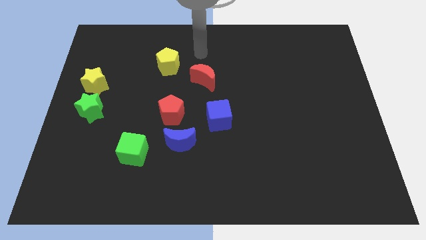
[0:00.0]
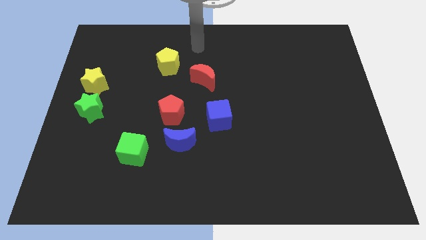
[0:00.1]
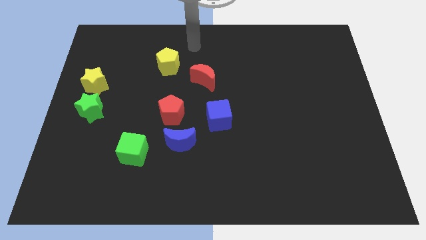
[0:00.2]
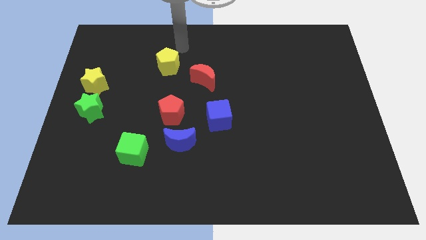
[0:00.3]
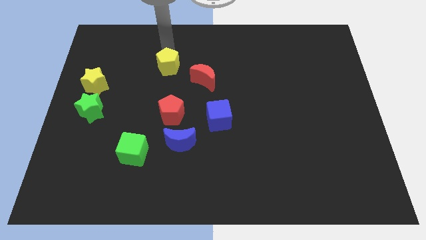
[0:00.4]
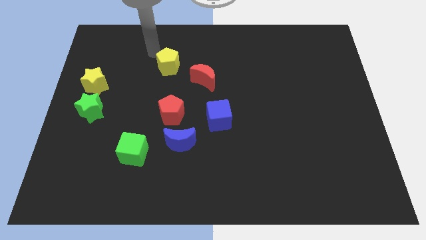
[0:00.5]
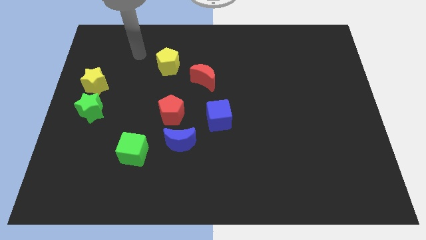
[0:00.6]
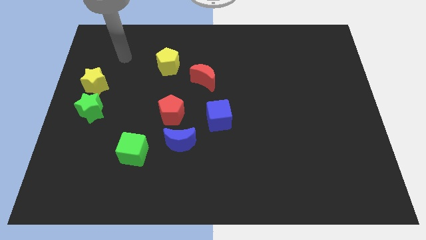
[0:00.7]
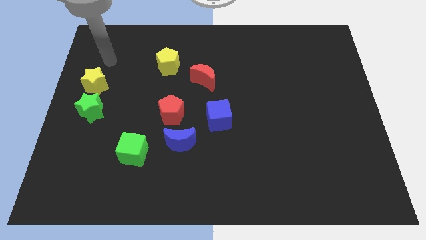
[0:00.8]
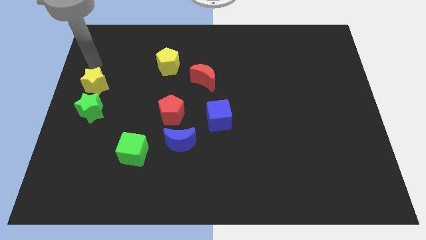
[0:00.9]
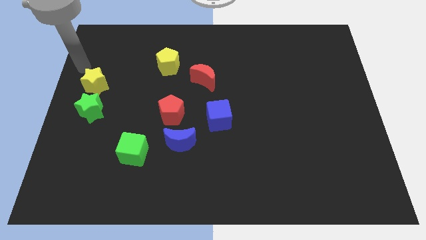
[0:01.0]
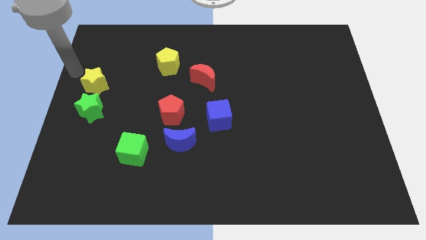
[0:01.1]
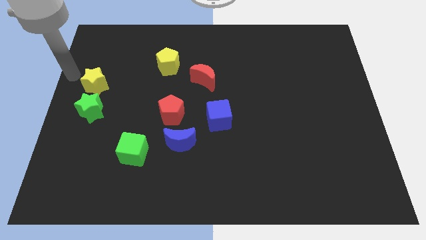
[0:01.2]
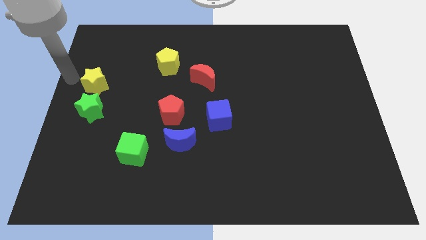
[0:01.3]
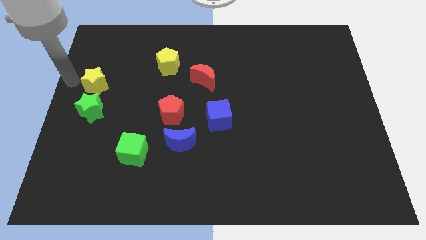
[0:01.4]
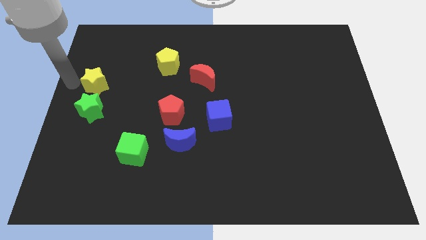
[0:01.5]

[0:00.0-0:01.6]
move your arm towards the center left

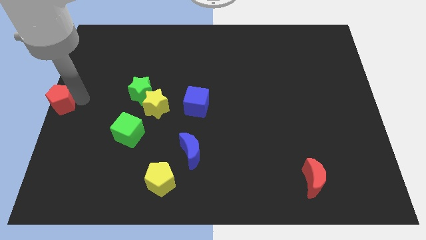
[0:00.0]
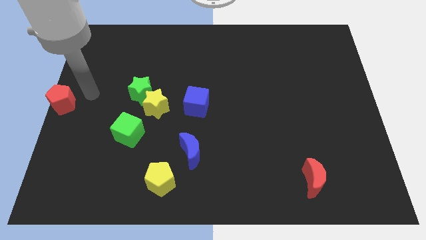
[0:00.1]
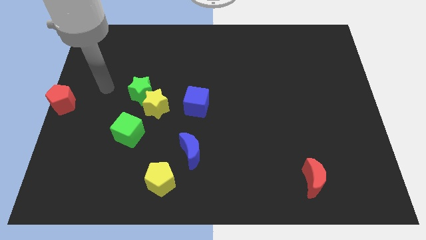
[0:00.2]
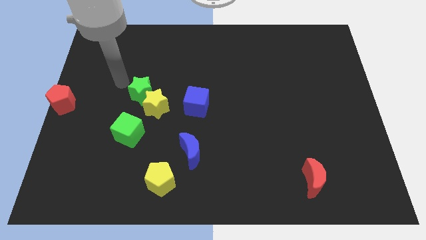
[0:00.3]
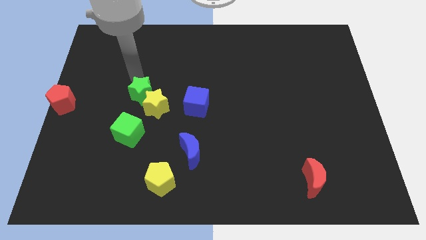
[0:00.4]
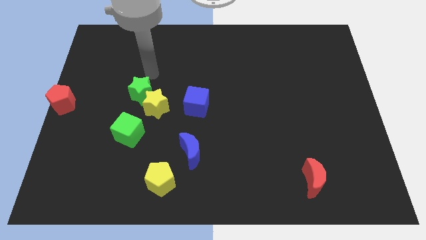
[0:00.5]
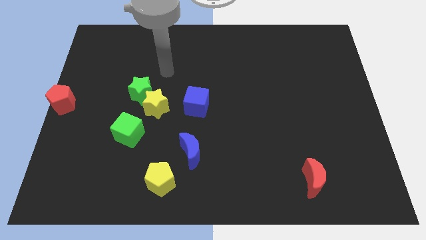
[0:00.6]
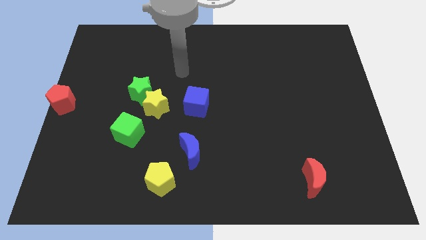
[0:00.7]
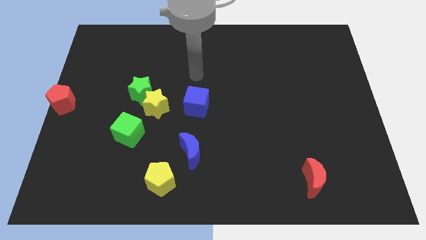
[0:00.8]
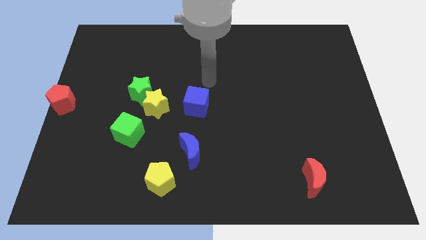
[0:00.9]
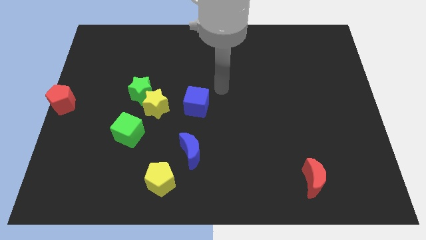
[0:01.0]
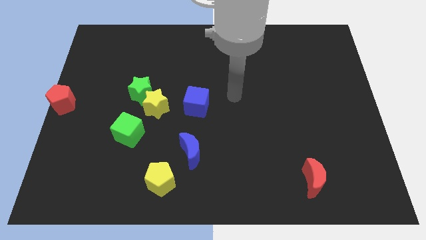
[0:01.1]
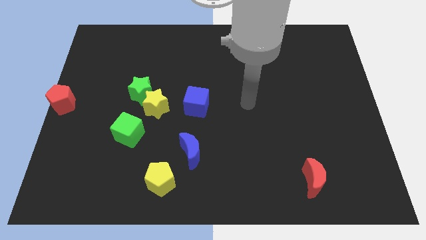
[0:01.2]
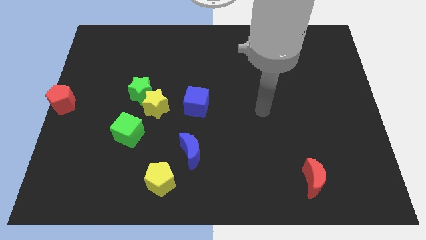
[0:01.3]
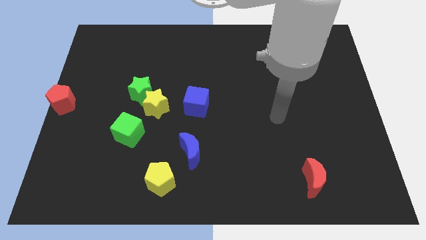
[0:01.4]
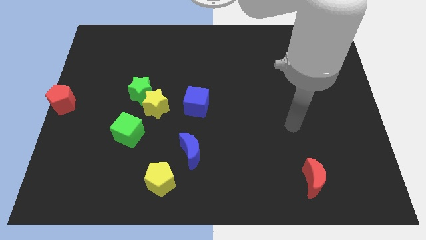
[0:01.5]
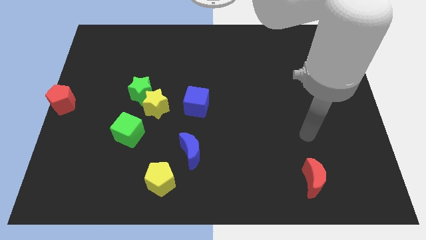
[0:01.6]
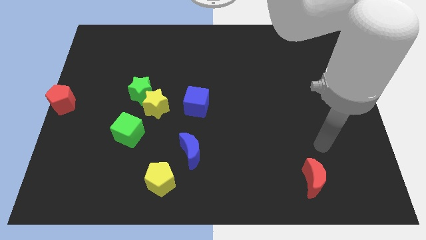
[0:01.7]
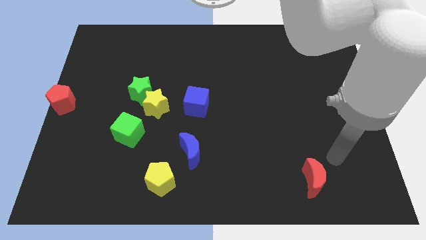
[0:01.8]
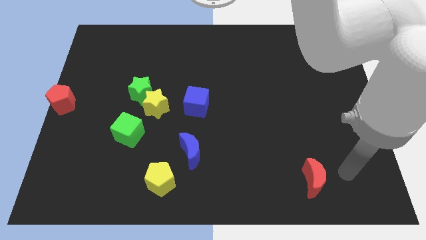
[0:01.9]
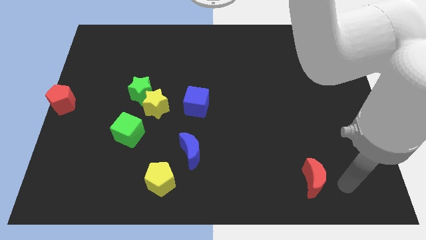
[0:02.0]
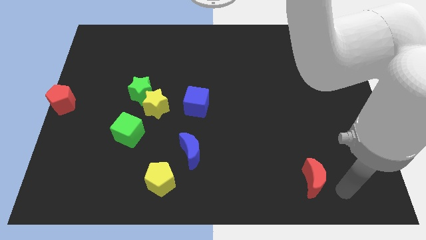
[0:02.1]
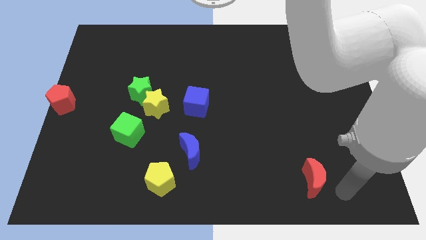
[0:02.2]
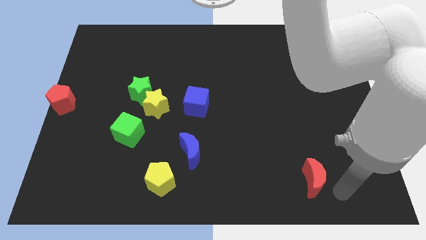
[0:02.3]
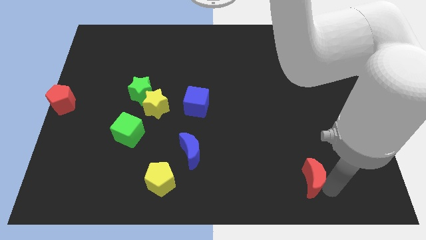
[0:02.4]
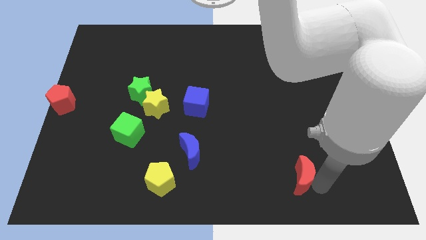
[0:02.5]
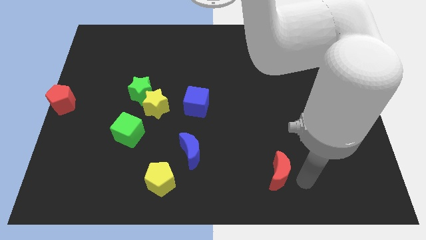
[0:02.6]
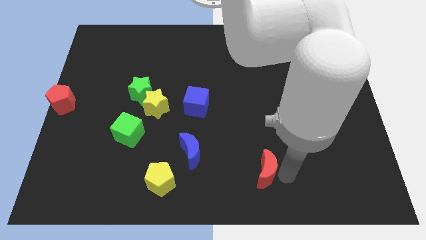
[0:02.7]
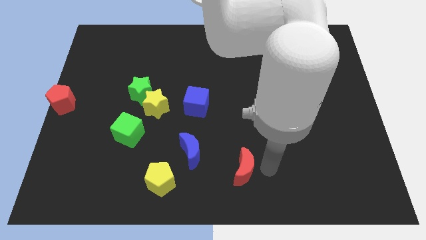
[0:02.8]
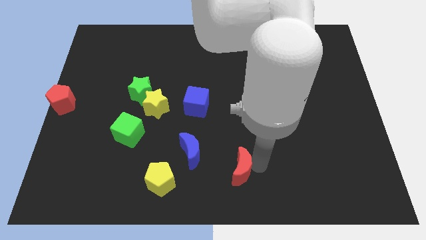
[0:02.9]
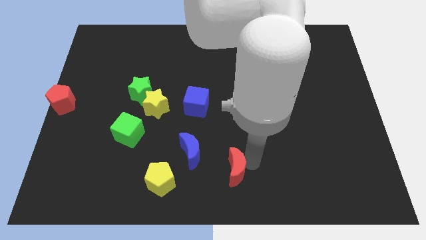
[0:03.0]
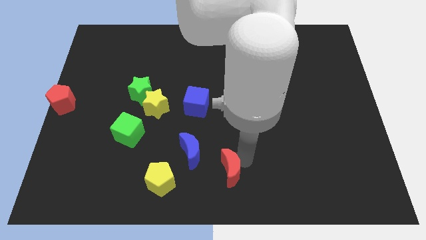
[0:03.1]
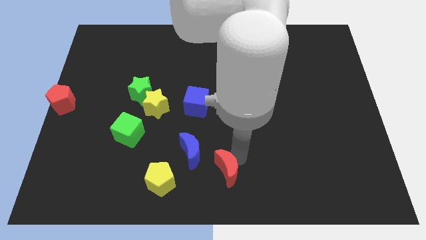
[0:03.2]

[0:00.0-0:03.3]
push the red moon to the bottom center of the board

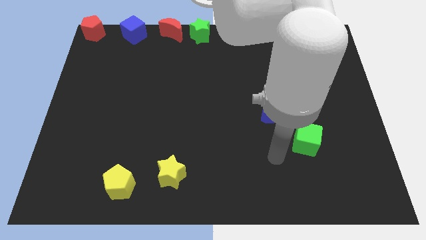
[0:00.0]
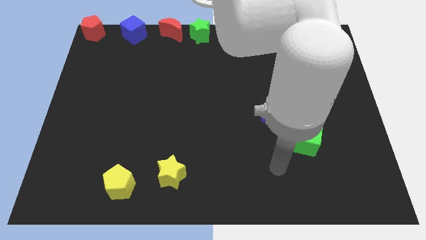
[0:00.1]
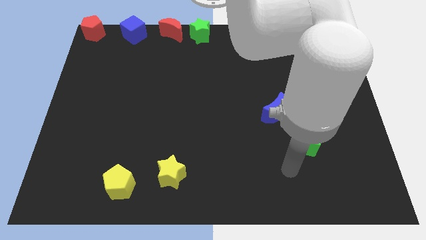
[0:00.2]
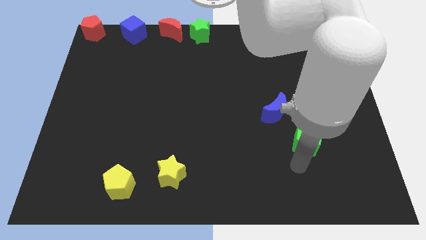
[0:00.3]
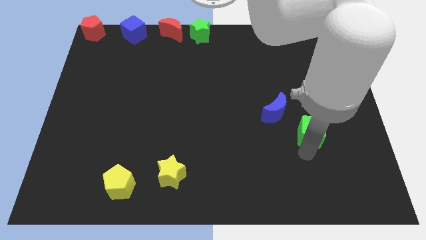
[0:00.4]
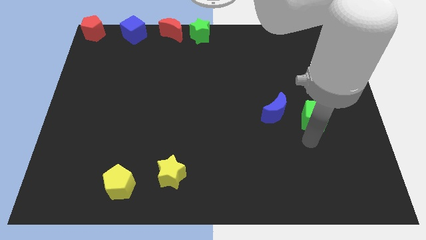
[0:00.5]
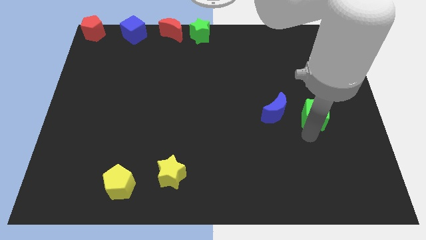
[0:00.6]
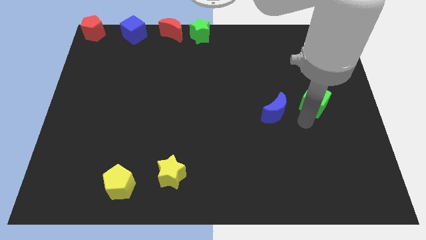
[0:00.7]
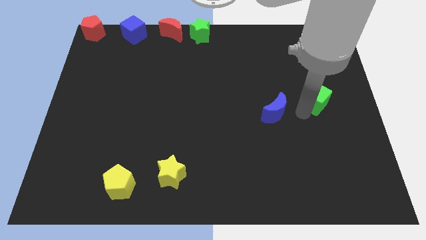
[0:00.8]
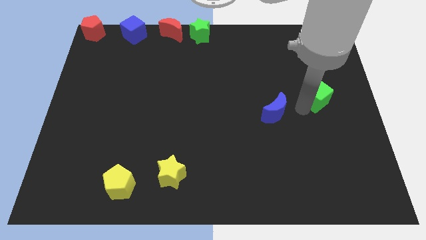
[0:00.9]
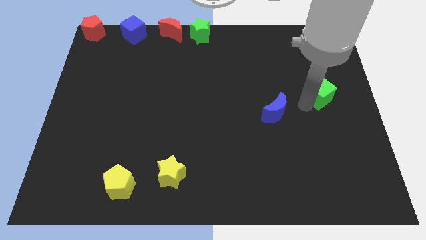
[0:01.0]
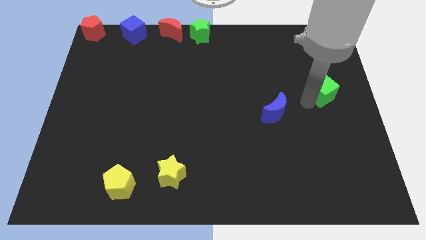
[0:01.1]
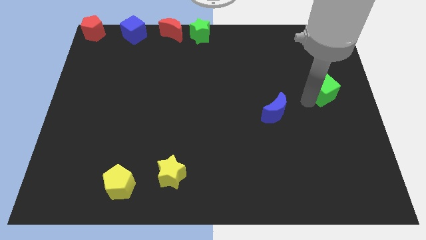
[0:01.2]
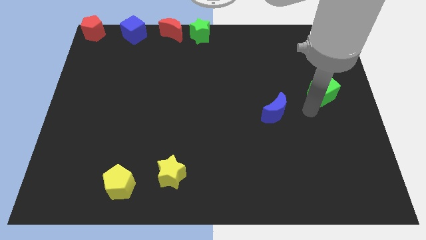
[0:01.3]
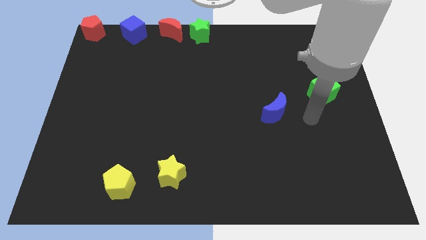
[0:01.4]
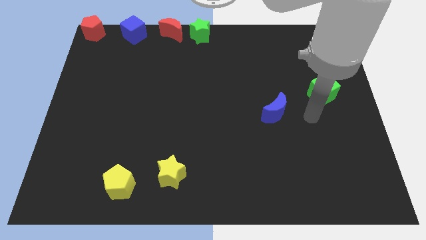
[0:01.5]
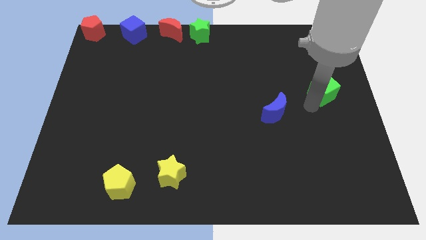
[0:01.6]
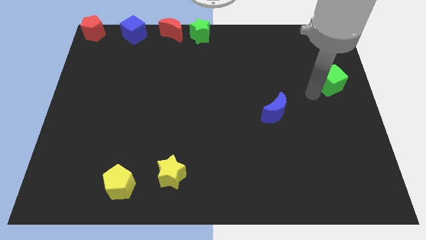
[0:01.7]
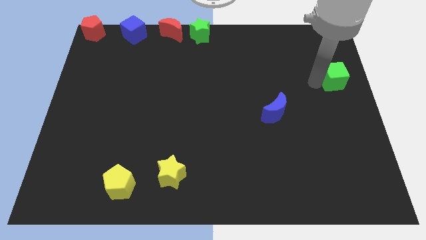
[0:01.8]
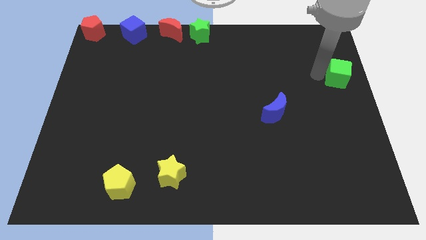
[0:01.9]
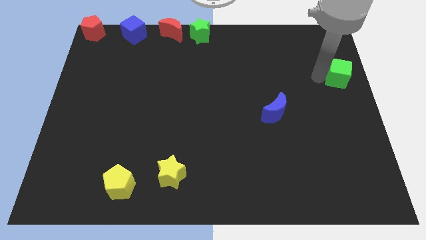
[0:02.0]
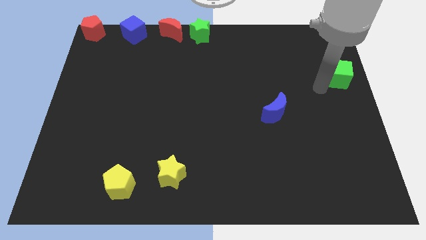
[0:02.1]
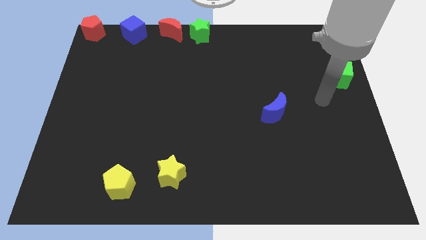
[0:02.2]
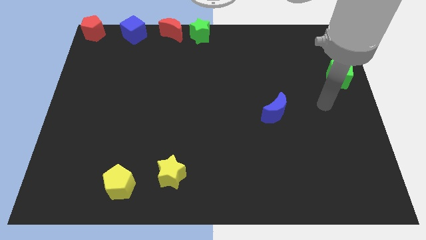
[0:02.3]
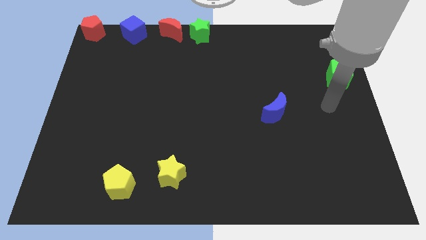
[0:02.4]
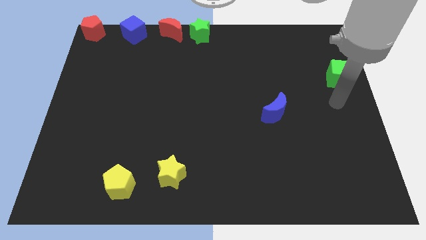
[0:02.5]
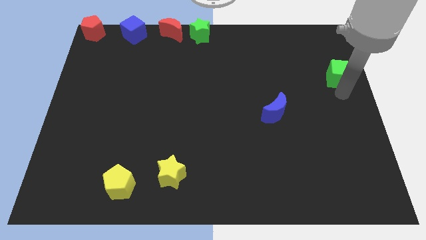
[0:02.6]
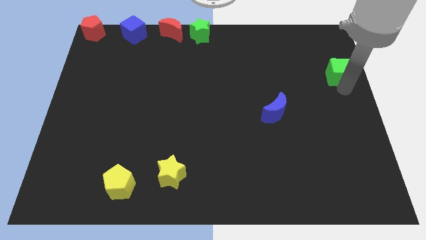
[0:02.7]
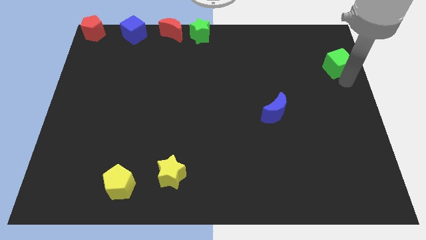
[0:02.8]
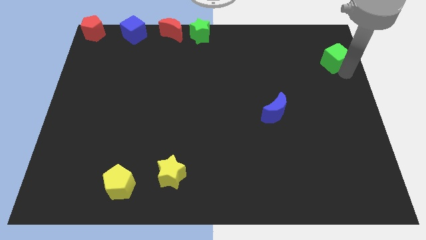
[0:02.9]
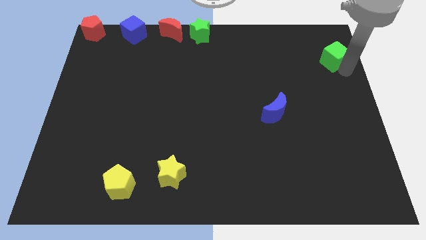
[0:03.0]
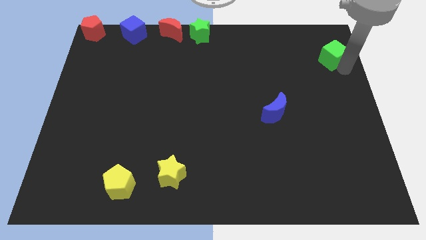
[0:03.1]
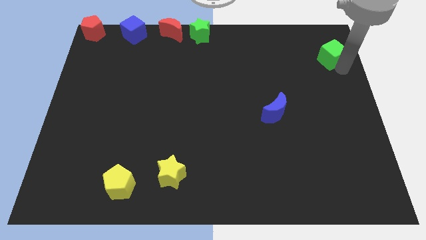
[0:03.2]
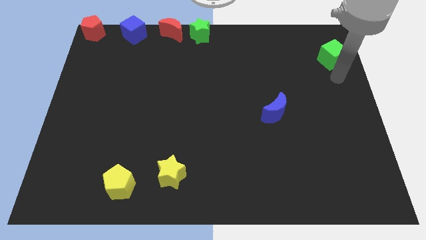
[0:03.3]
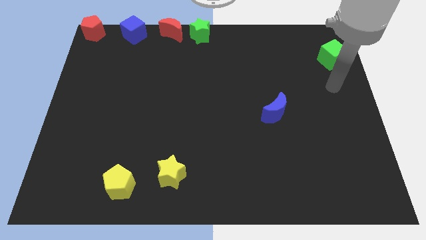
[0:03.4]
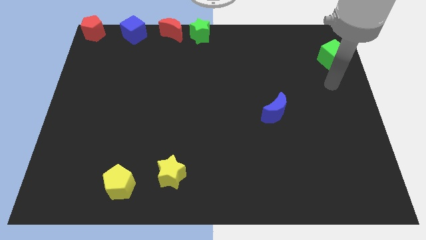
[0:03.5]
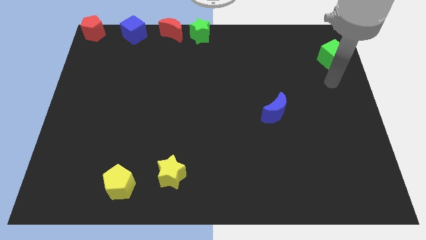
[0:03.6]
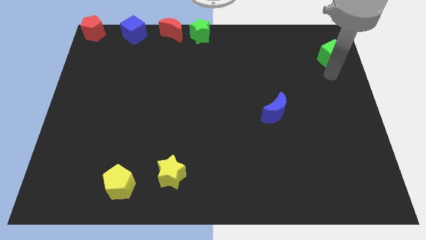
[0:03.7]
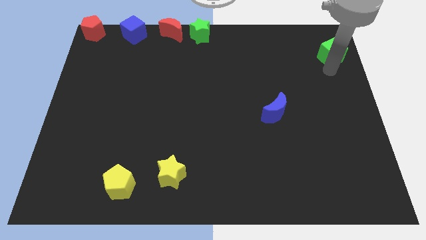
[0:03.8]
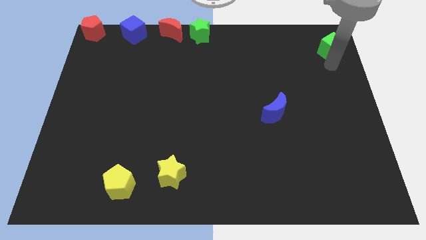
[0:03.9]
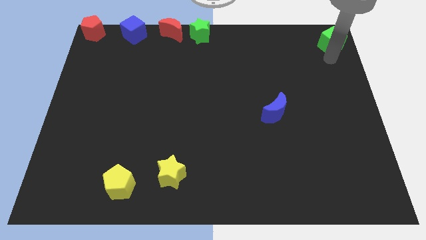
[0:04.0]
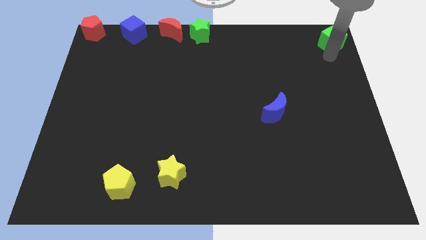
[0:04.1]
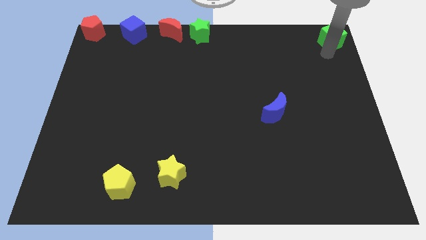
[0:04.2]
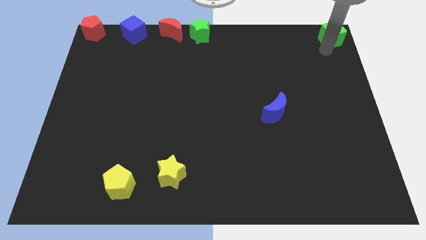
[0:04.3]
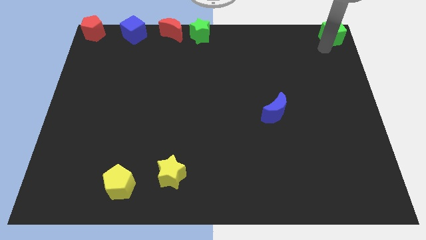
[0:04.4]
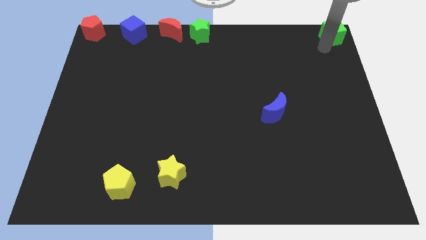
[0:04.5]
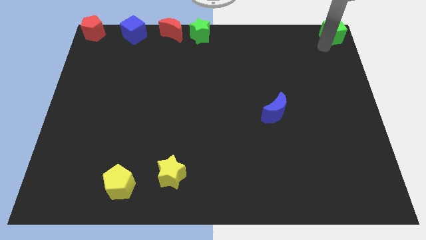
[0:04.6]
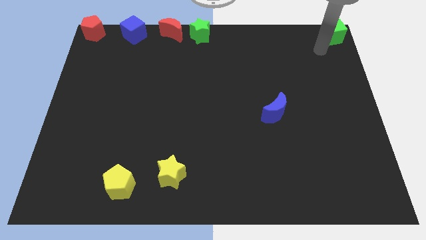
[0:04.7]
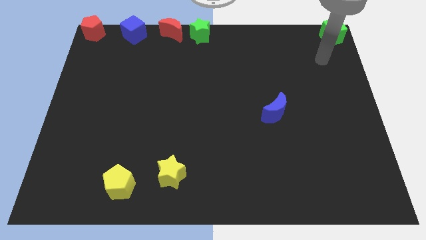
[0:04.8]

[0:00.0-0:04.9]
move the green cube to the top right corner of the board
